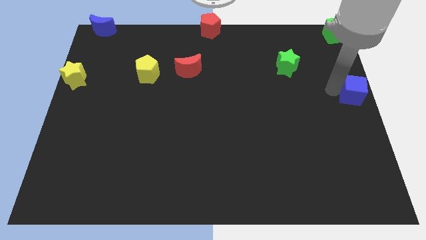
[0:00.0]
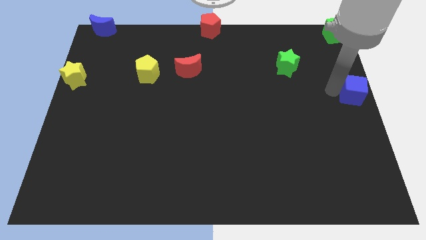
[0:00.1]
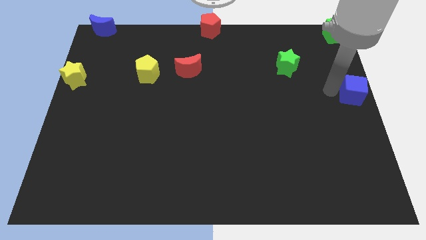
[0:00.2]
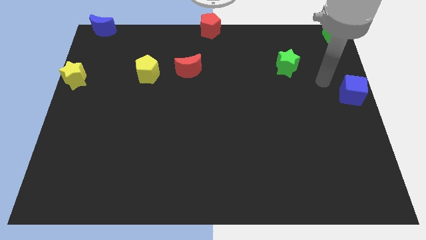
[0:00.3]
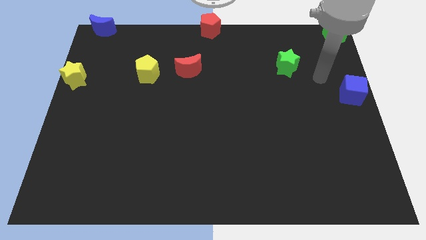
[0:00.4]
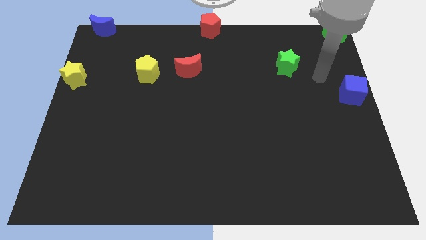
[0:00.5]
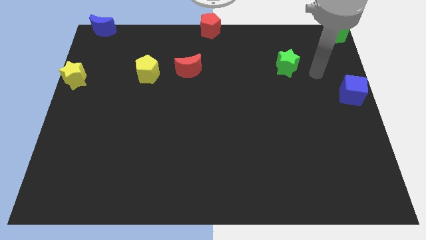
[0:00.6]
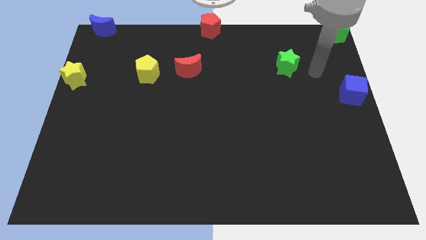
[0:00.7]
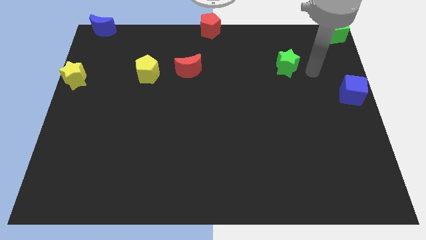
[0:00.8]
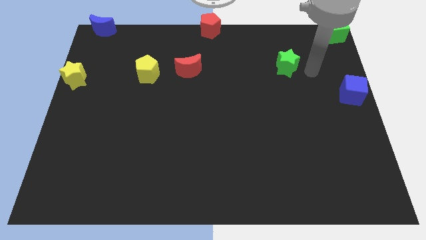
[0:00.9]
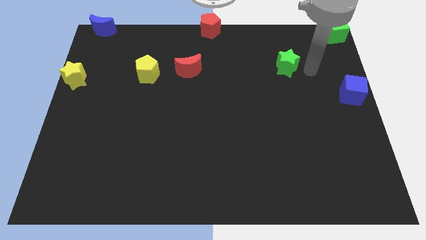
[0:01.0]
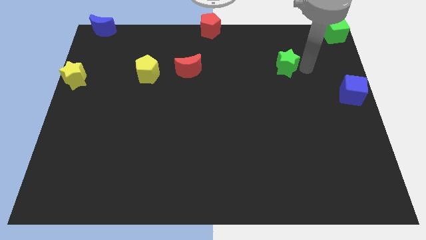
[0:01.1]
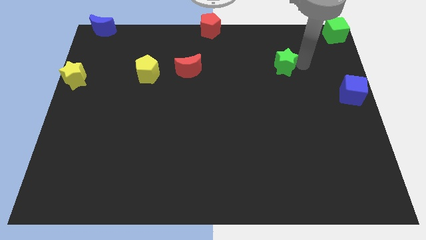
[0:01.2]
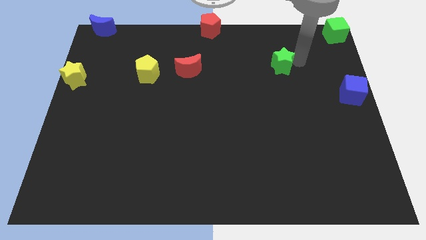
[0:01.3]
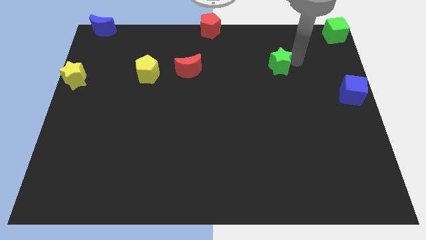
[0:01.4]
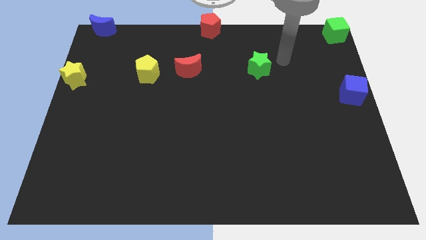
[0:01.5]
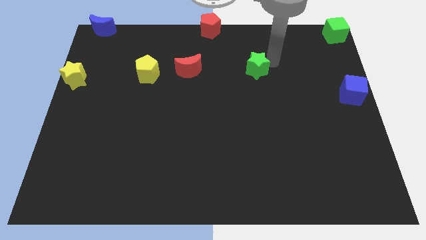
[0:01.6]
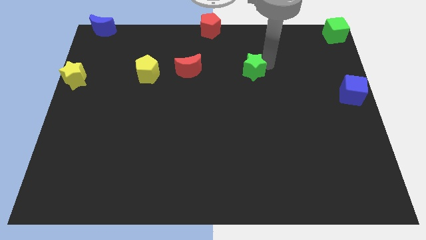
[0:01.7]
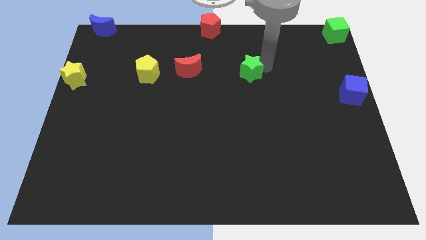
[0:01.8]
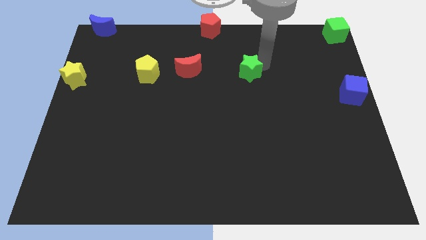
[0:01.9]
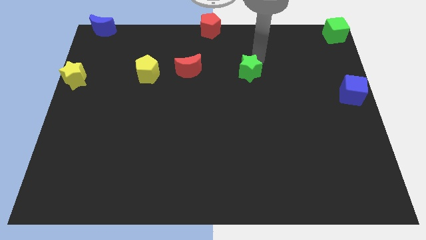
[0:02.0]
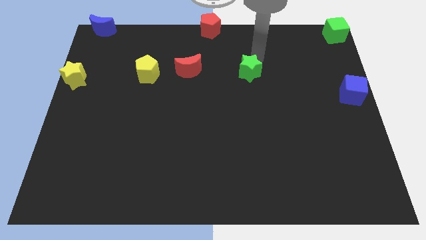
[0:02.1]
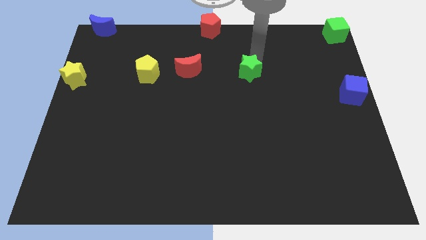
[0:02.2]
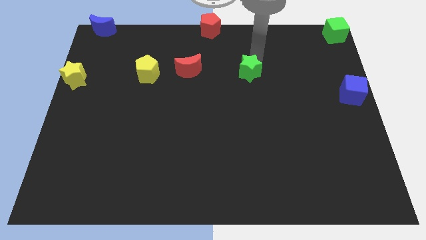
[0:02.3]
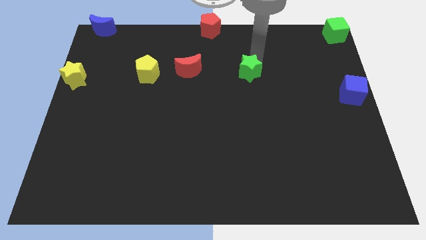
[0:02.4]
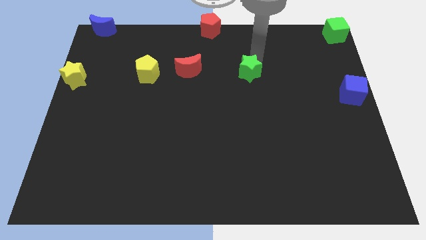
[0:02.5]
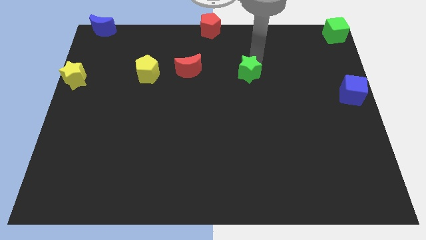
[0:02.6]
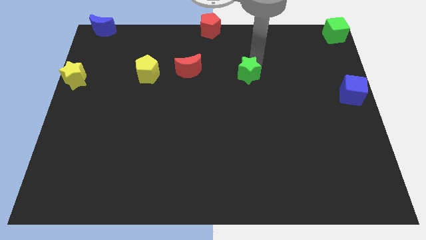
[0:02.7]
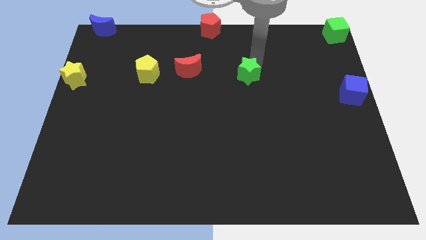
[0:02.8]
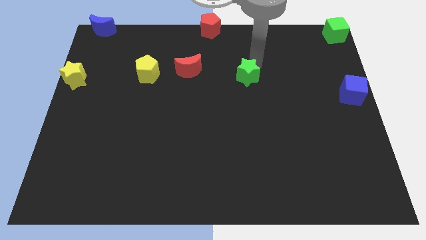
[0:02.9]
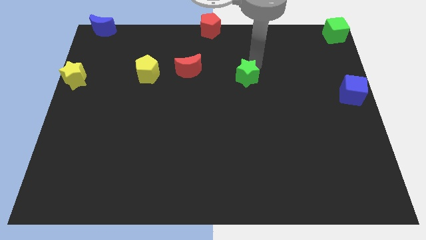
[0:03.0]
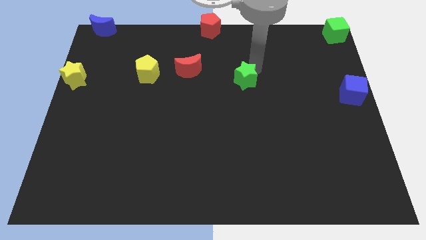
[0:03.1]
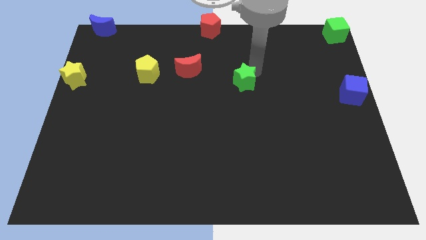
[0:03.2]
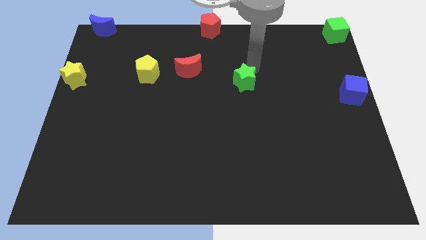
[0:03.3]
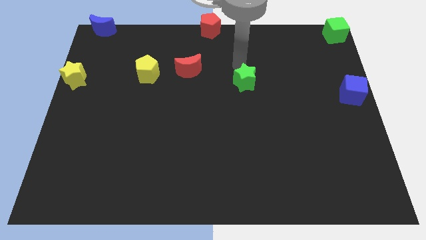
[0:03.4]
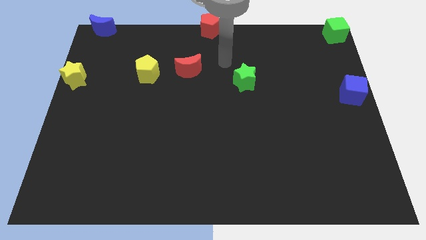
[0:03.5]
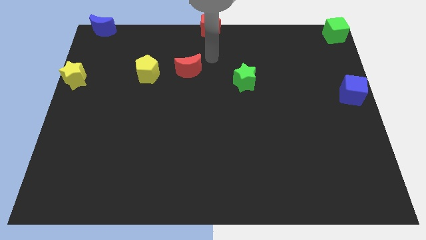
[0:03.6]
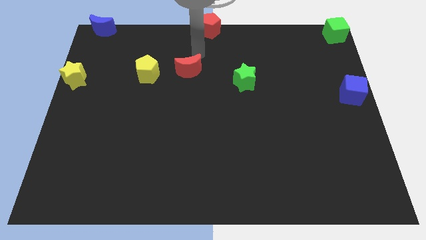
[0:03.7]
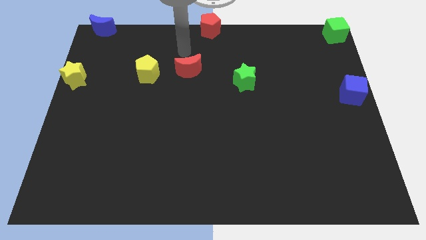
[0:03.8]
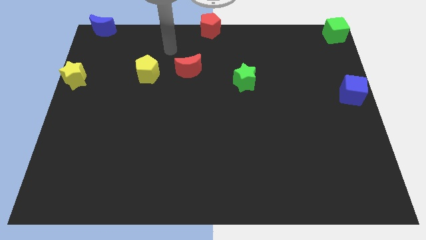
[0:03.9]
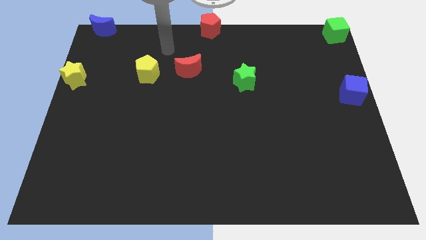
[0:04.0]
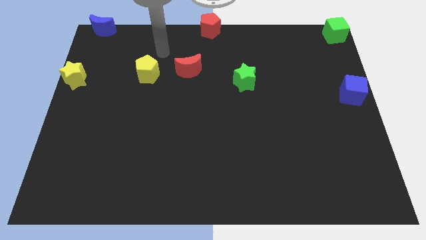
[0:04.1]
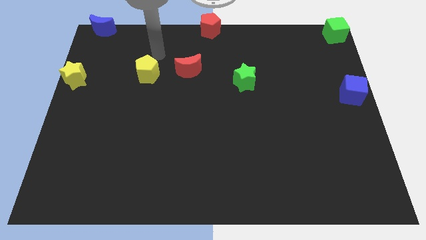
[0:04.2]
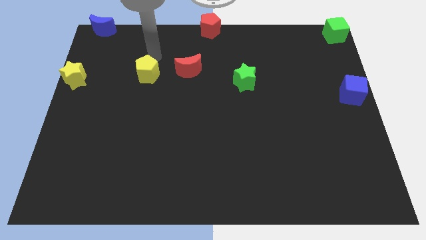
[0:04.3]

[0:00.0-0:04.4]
slide the green star diagonally bottom right towards the red moon

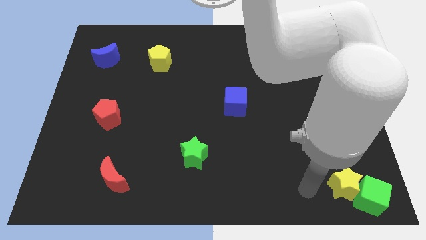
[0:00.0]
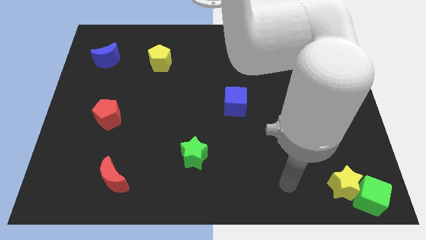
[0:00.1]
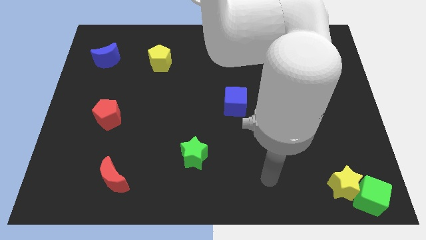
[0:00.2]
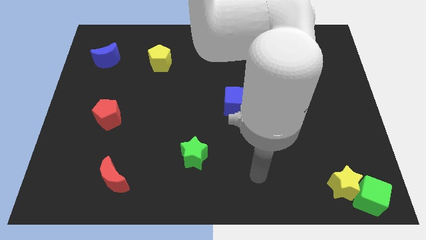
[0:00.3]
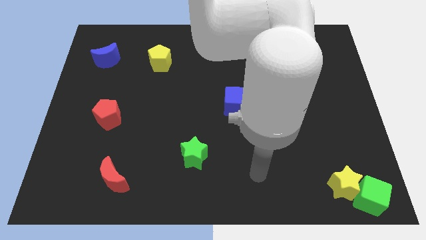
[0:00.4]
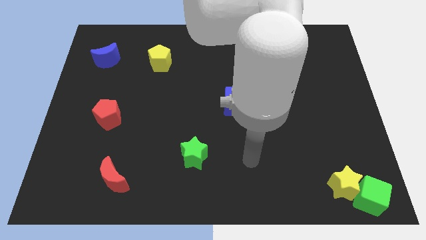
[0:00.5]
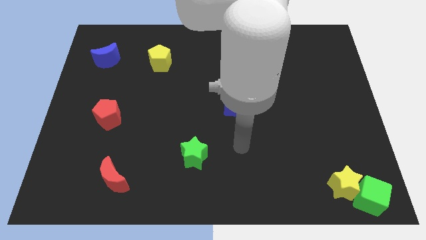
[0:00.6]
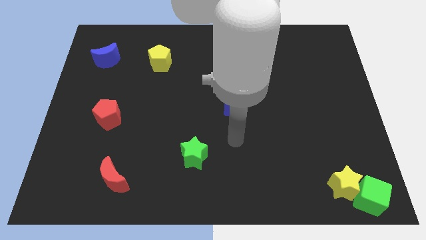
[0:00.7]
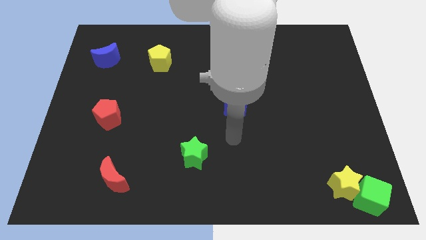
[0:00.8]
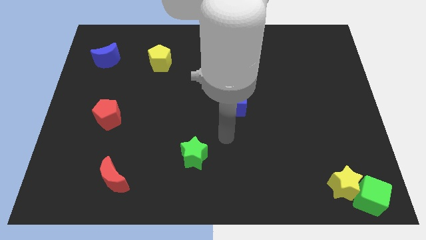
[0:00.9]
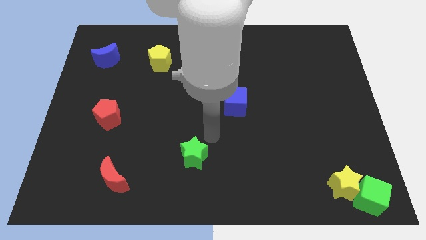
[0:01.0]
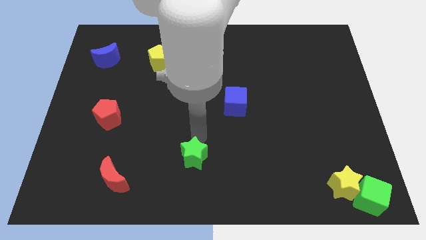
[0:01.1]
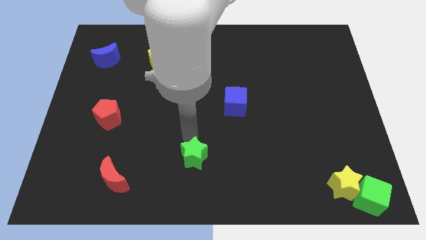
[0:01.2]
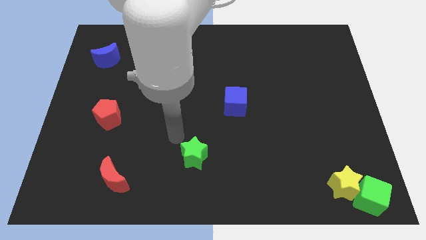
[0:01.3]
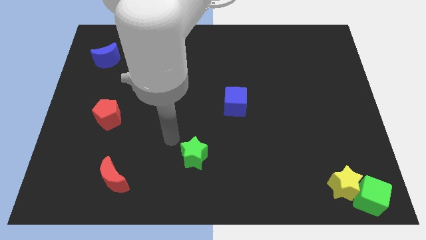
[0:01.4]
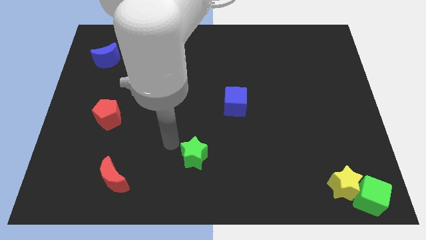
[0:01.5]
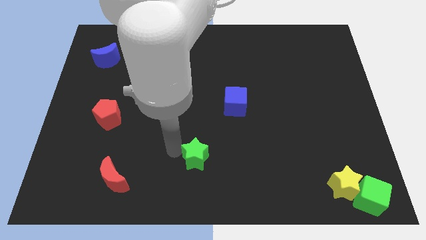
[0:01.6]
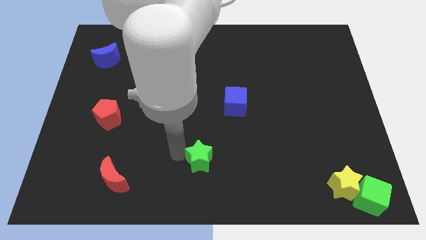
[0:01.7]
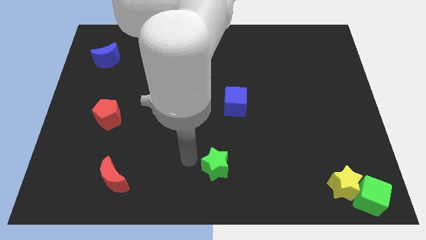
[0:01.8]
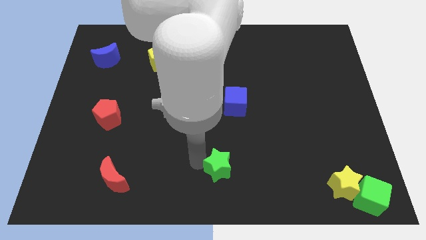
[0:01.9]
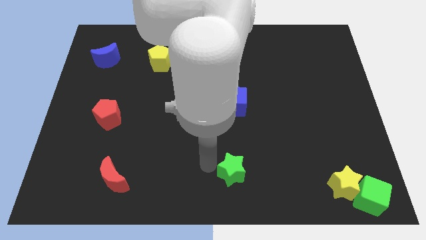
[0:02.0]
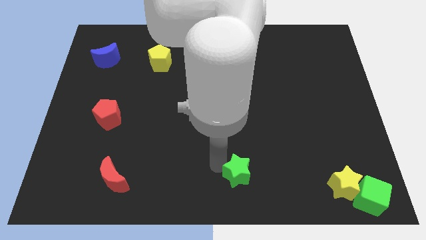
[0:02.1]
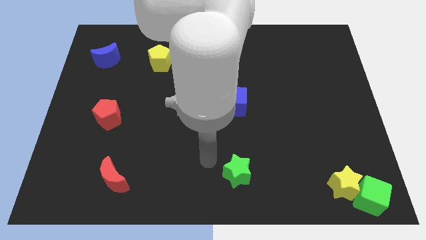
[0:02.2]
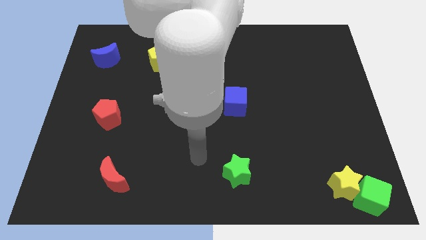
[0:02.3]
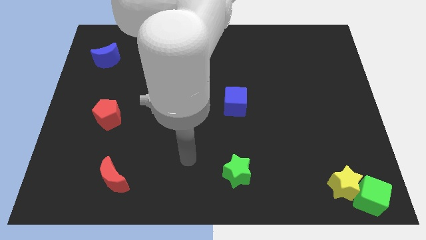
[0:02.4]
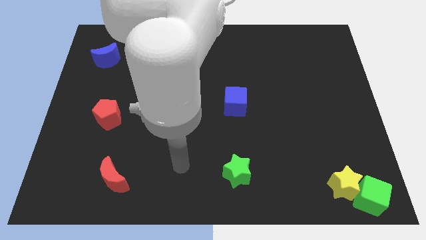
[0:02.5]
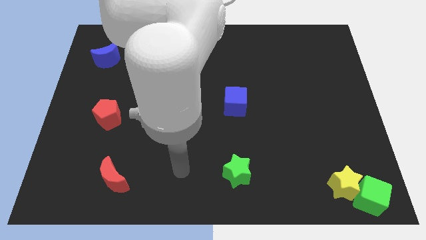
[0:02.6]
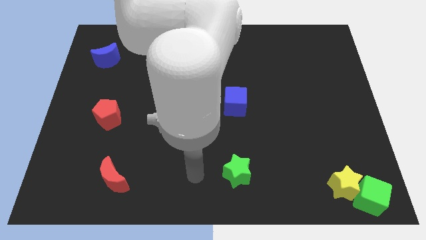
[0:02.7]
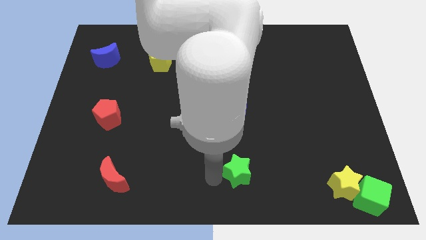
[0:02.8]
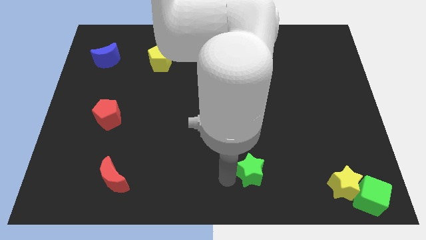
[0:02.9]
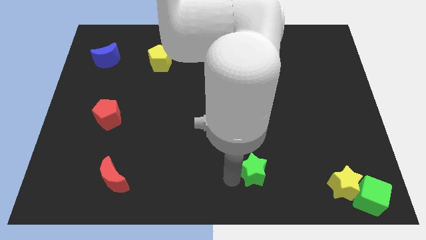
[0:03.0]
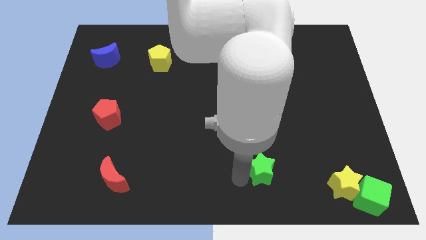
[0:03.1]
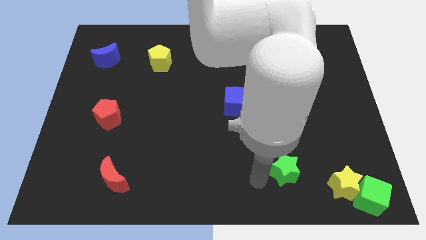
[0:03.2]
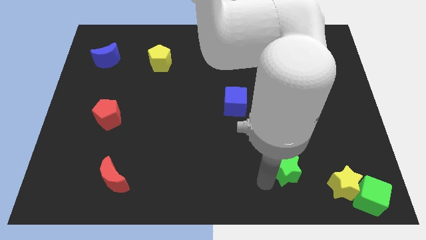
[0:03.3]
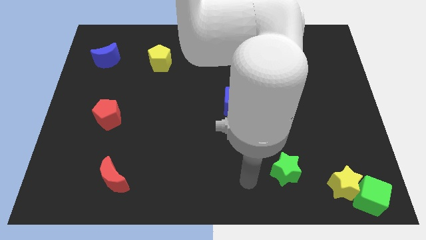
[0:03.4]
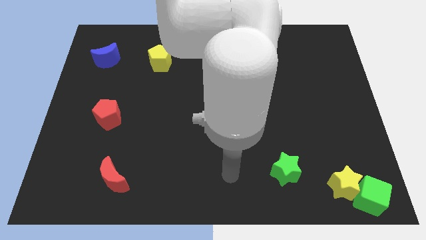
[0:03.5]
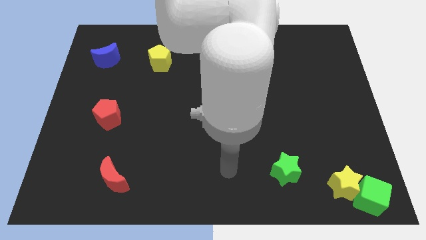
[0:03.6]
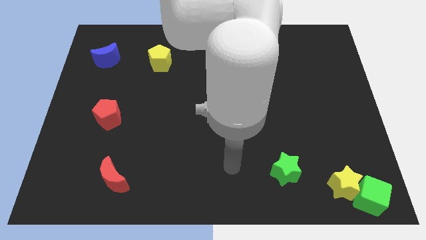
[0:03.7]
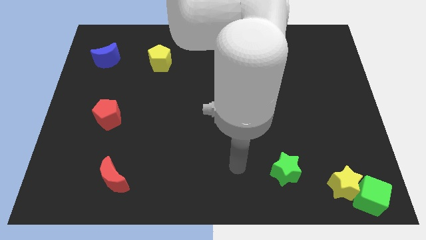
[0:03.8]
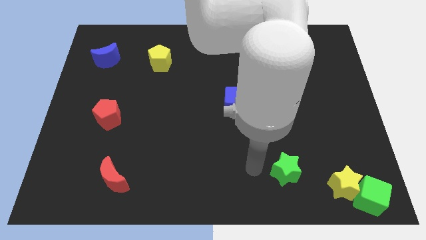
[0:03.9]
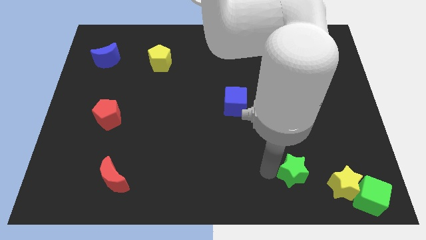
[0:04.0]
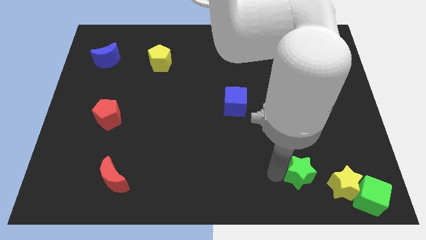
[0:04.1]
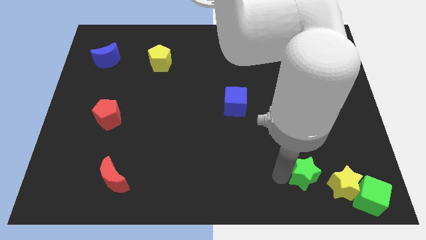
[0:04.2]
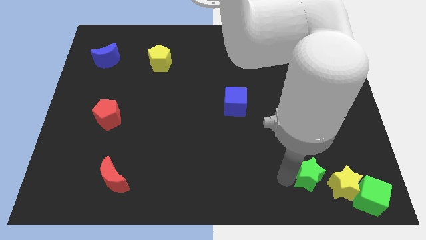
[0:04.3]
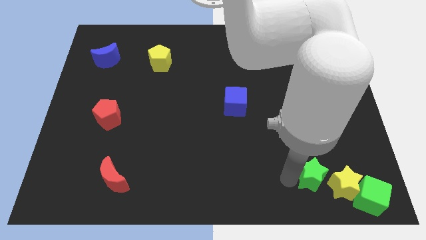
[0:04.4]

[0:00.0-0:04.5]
move the green star to the left of the yellow star
